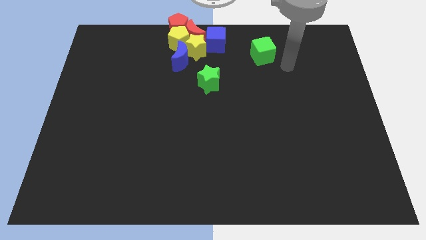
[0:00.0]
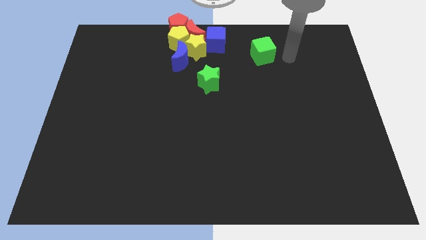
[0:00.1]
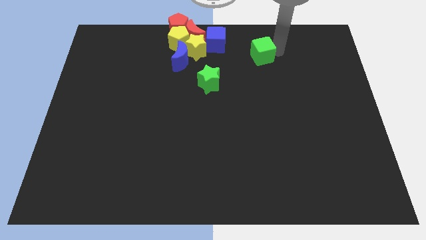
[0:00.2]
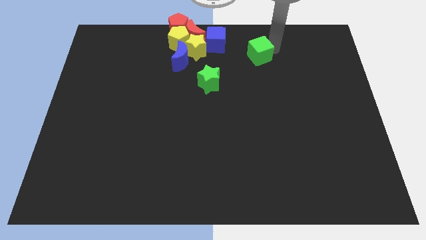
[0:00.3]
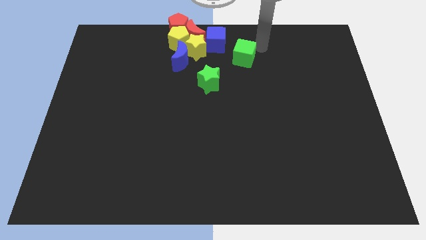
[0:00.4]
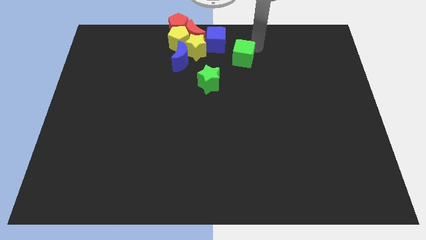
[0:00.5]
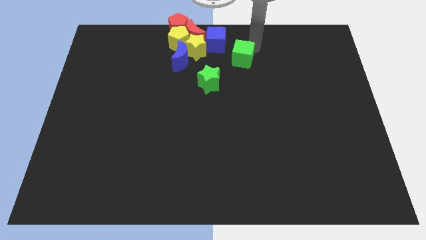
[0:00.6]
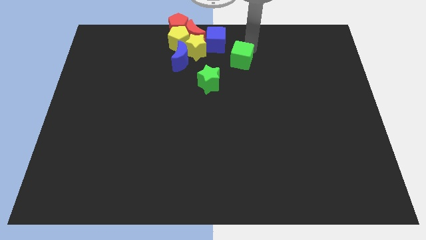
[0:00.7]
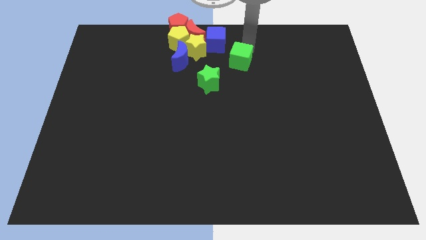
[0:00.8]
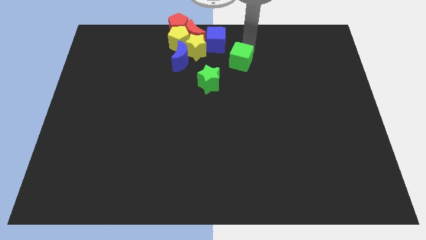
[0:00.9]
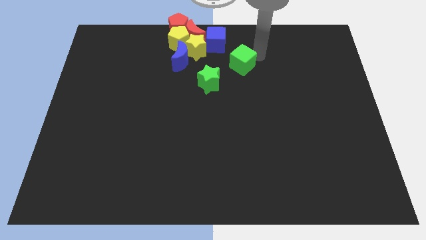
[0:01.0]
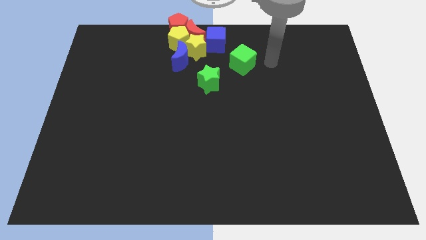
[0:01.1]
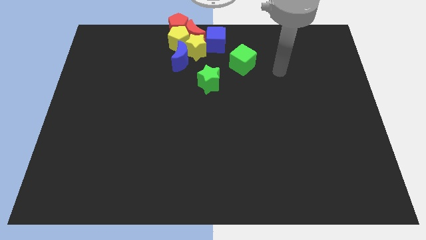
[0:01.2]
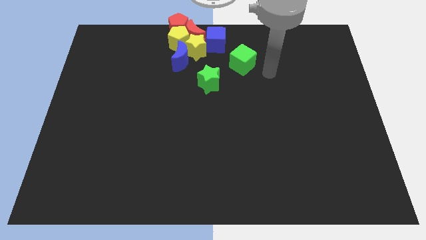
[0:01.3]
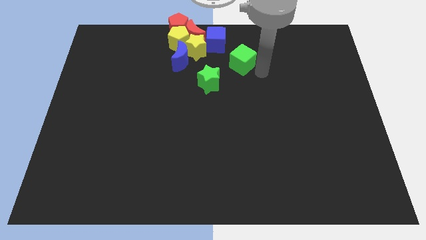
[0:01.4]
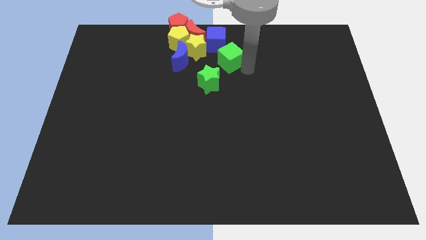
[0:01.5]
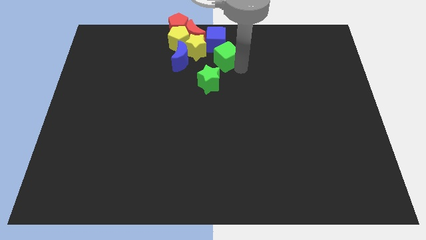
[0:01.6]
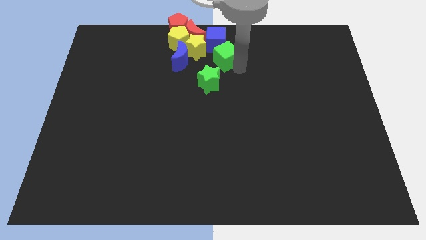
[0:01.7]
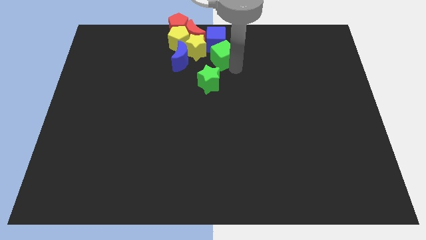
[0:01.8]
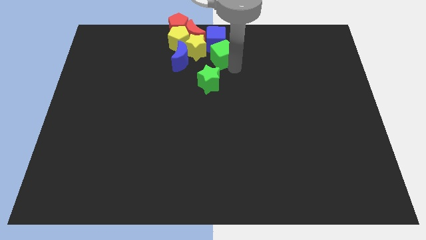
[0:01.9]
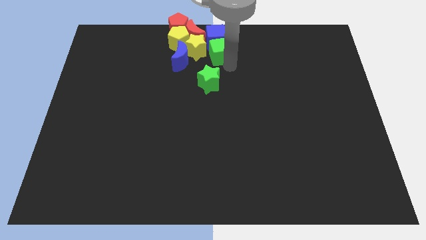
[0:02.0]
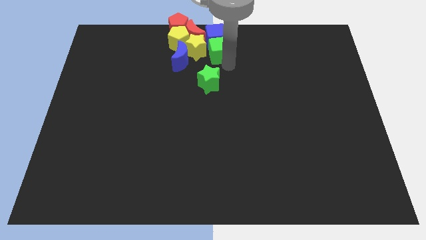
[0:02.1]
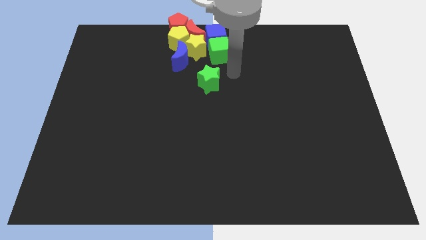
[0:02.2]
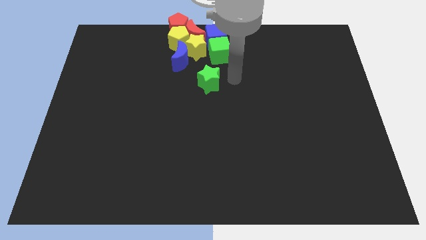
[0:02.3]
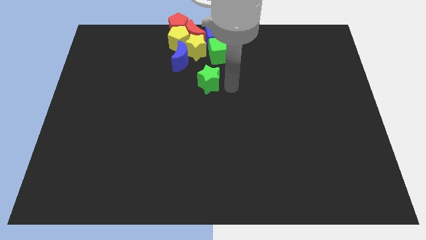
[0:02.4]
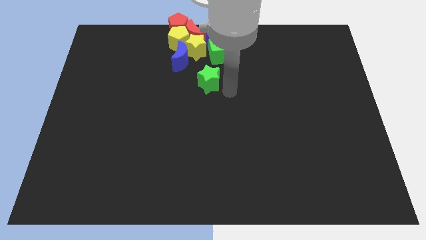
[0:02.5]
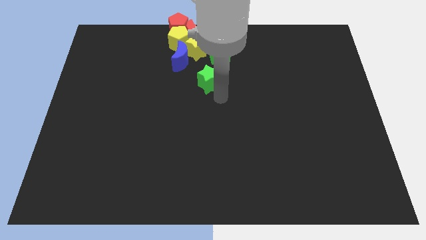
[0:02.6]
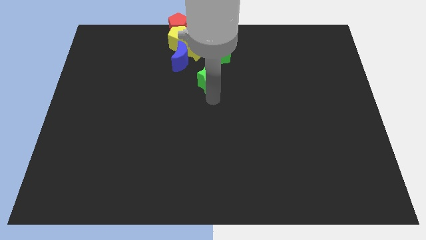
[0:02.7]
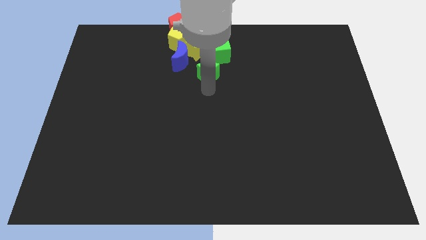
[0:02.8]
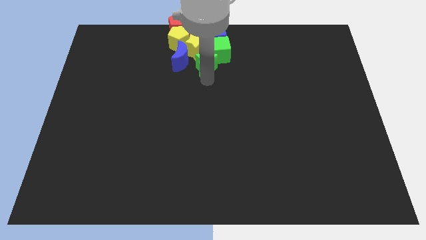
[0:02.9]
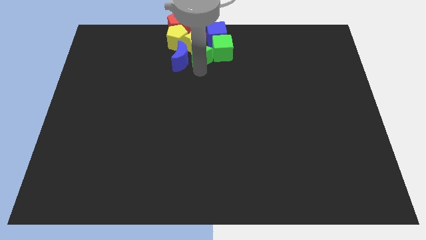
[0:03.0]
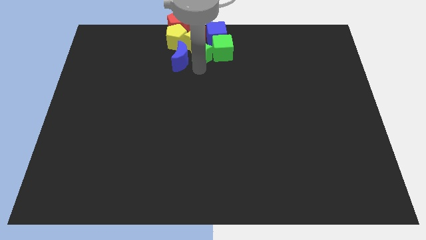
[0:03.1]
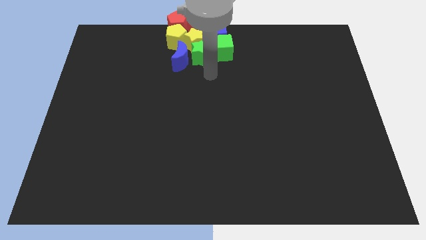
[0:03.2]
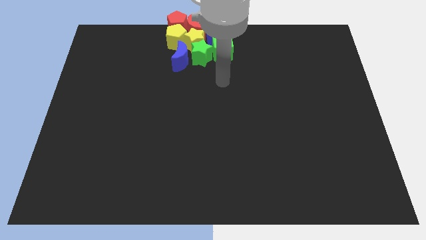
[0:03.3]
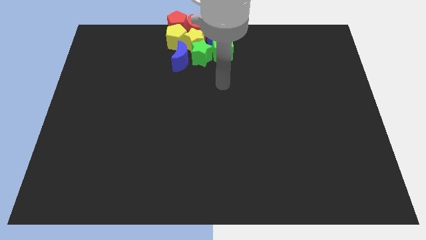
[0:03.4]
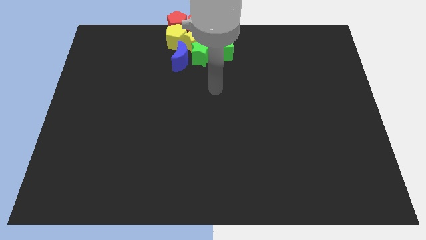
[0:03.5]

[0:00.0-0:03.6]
push the green blocks into the group of the blocks

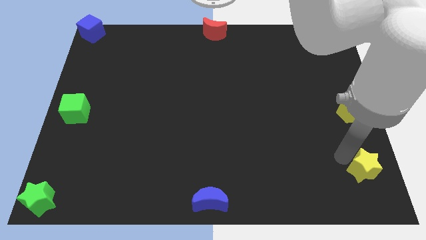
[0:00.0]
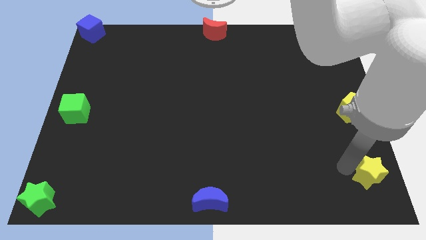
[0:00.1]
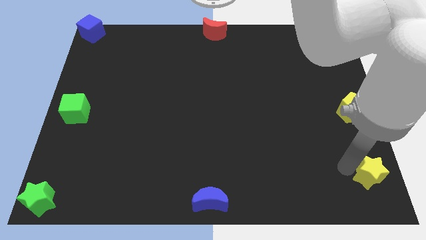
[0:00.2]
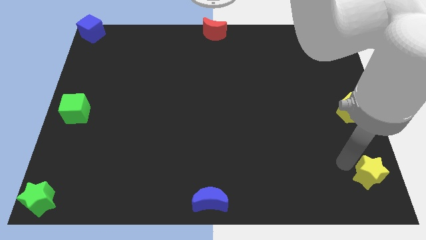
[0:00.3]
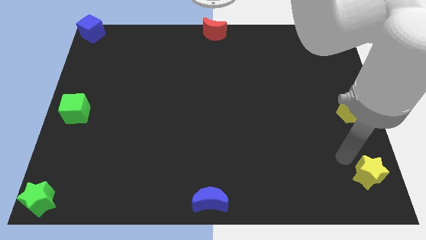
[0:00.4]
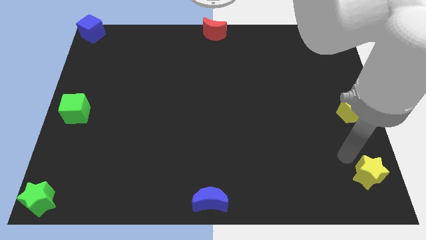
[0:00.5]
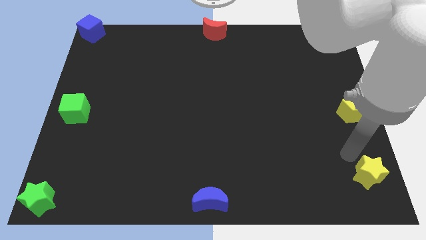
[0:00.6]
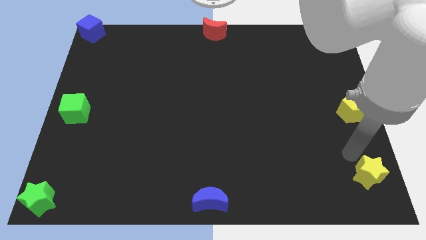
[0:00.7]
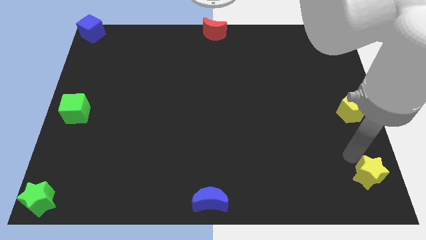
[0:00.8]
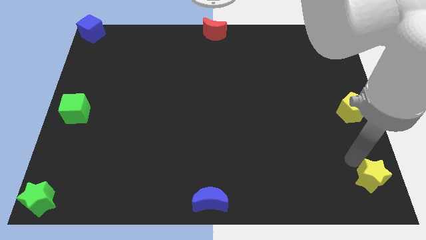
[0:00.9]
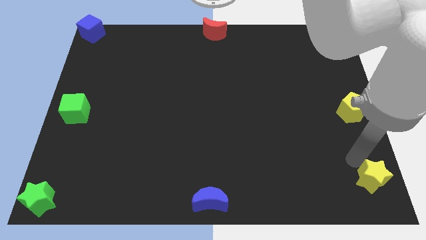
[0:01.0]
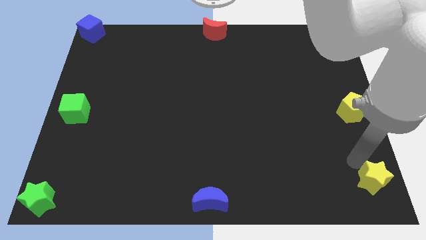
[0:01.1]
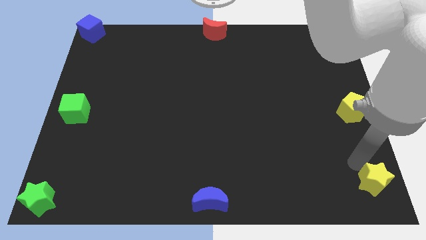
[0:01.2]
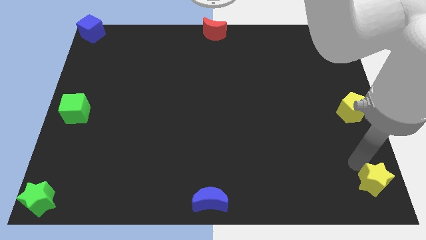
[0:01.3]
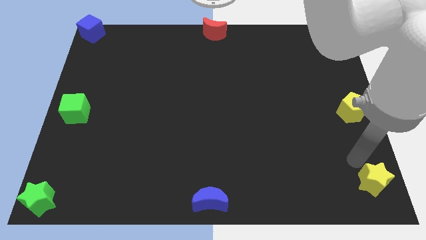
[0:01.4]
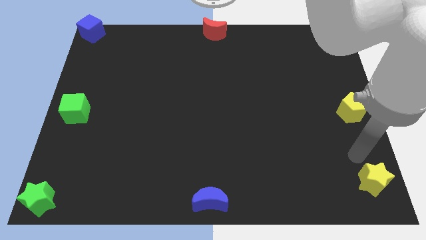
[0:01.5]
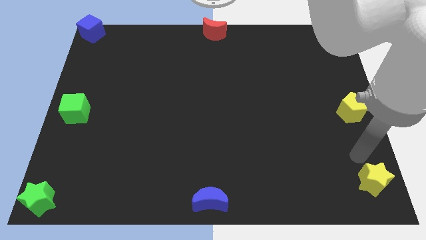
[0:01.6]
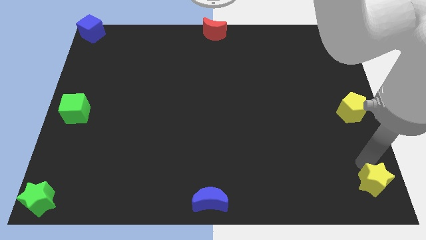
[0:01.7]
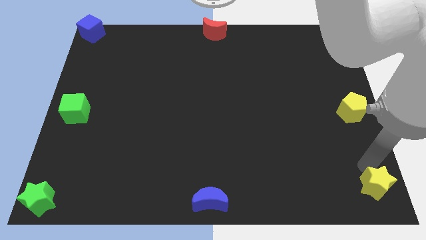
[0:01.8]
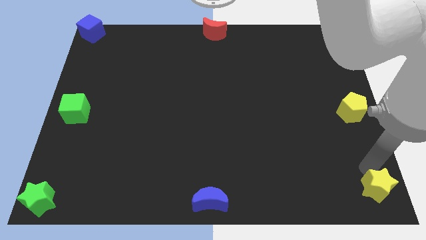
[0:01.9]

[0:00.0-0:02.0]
move the yellow star to right bottom corner of the board

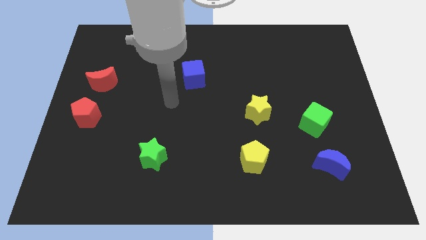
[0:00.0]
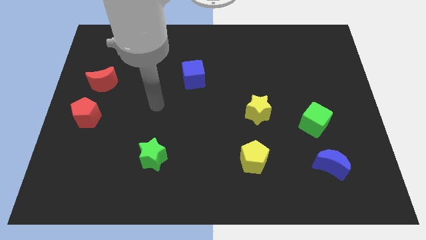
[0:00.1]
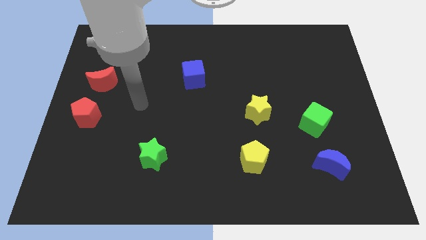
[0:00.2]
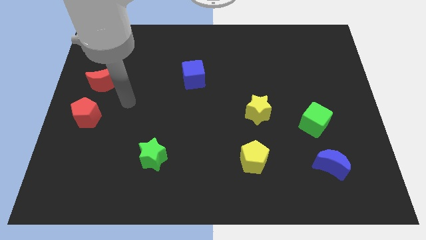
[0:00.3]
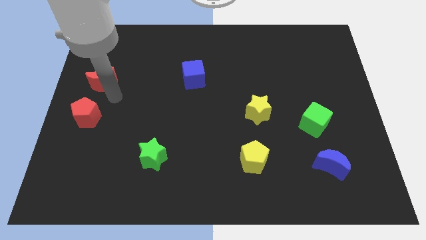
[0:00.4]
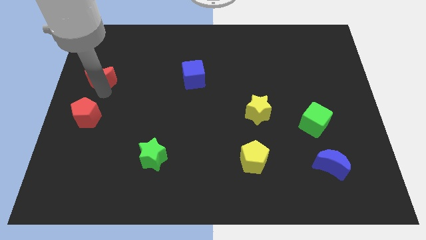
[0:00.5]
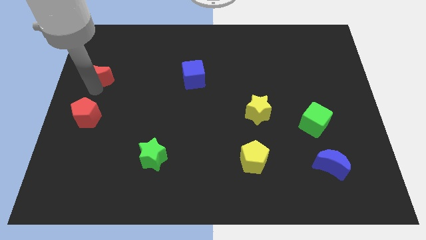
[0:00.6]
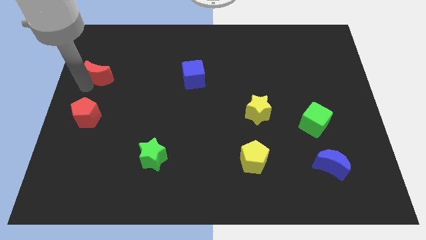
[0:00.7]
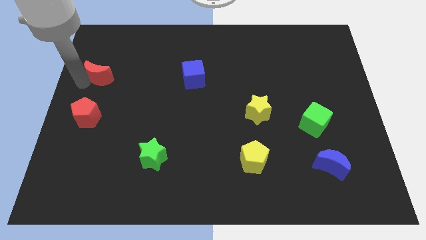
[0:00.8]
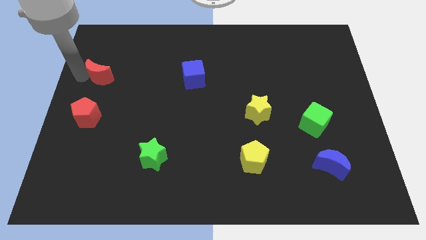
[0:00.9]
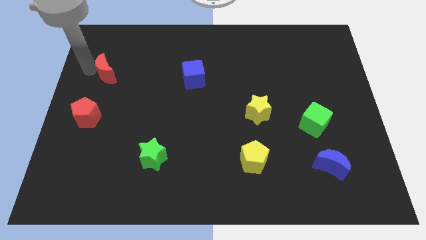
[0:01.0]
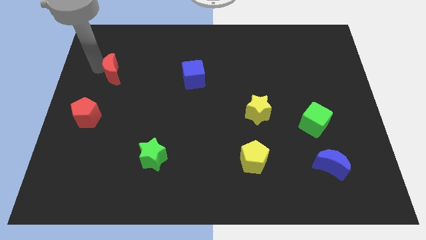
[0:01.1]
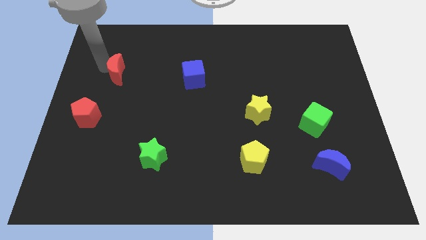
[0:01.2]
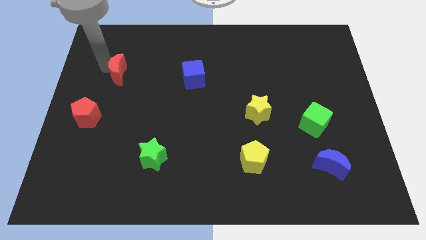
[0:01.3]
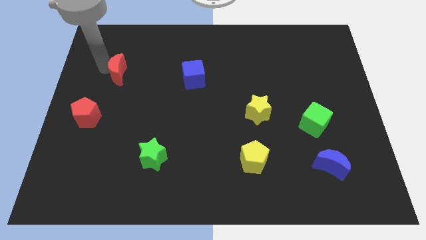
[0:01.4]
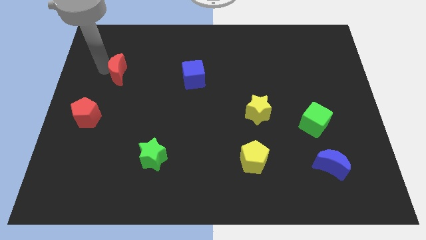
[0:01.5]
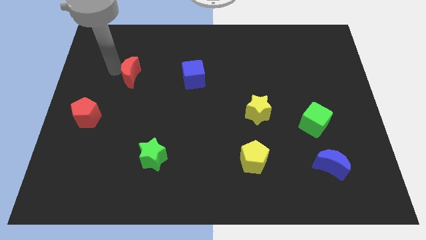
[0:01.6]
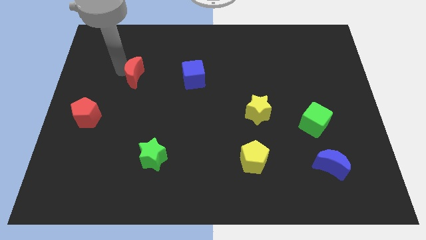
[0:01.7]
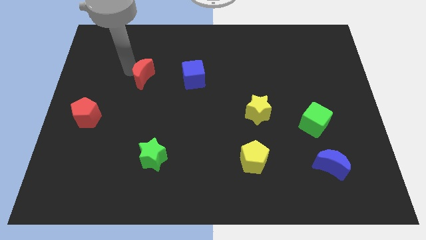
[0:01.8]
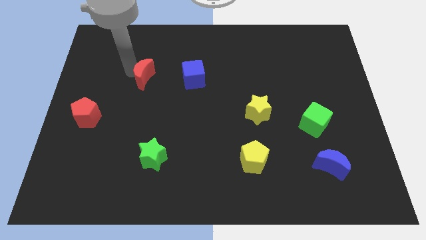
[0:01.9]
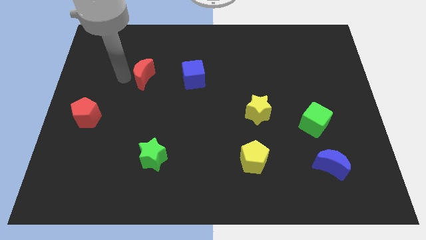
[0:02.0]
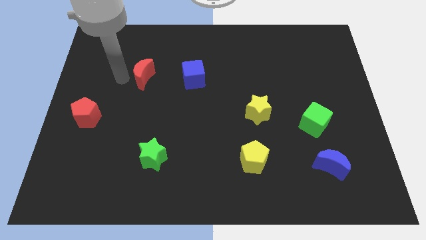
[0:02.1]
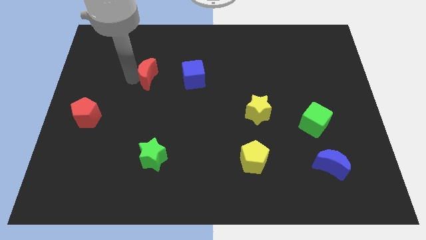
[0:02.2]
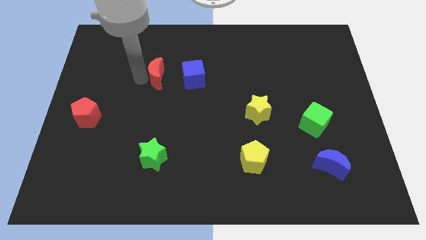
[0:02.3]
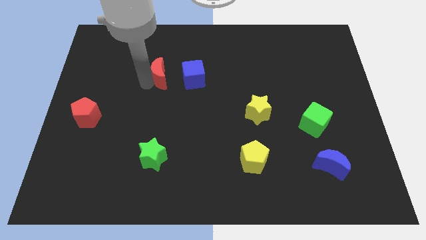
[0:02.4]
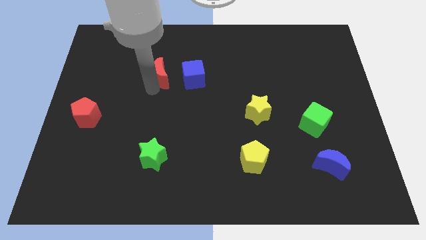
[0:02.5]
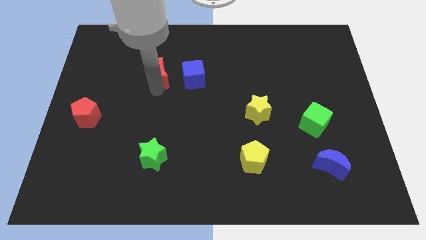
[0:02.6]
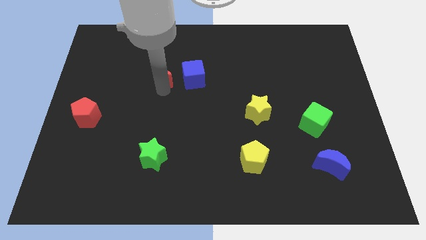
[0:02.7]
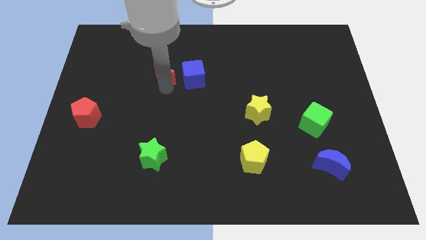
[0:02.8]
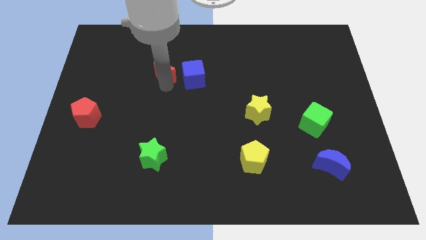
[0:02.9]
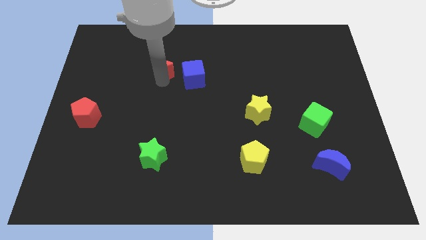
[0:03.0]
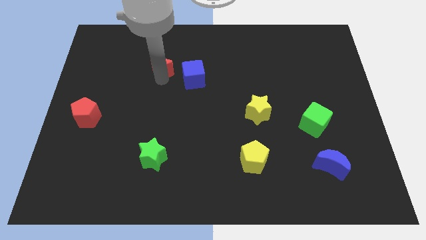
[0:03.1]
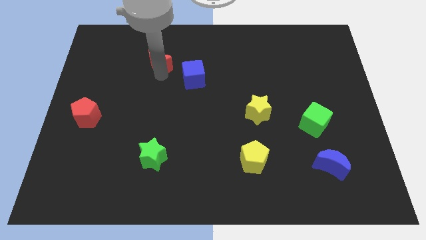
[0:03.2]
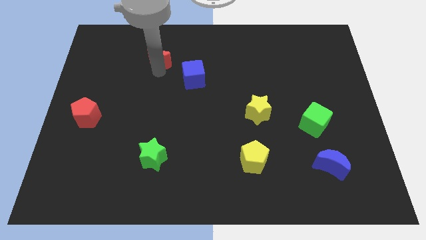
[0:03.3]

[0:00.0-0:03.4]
place the red moon diagonally to the top left of the blue cube
